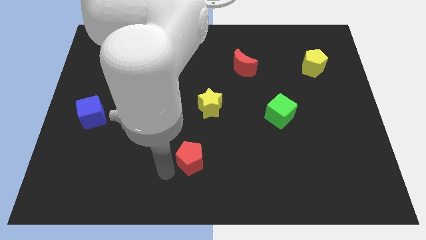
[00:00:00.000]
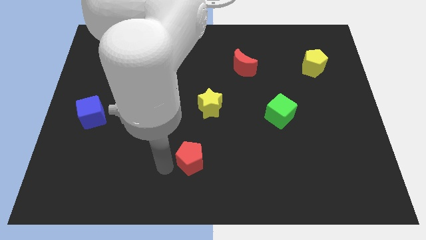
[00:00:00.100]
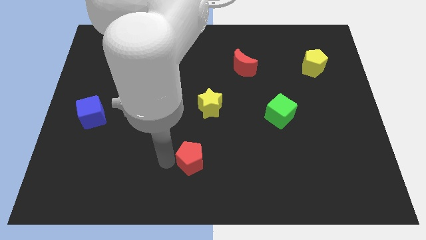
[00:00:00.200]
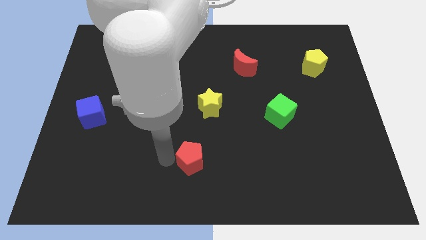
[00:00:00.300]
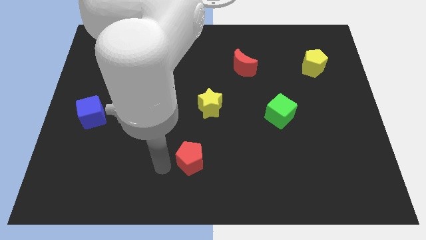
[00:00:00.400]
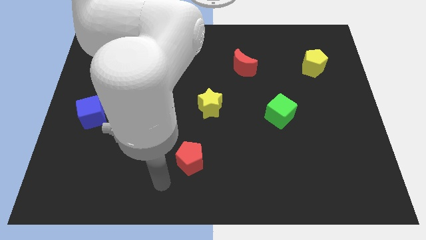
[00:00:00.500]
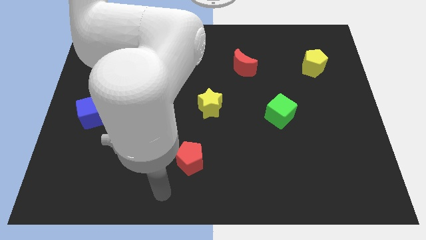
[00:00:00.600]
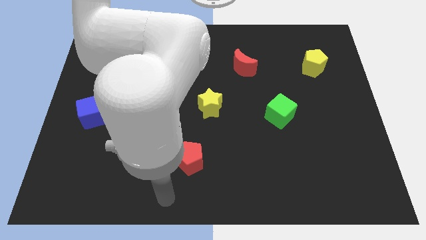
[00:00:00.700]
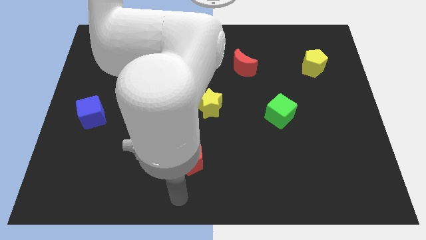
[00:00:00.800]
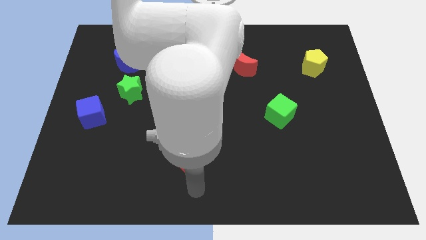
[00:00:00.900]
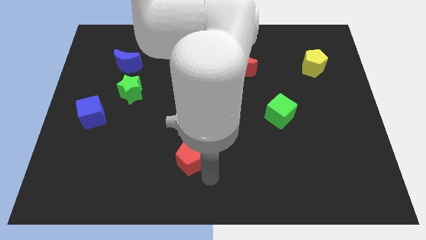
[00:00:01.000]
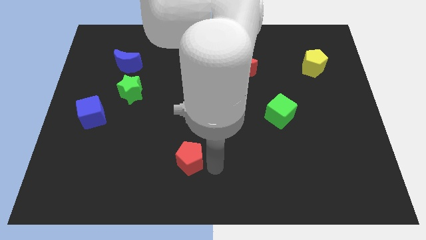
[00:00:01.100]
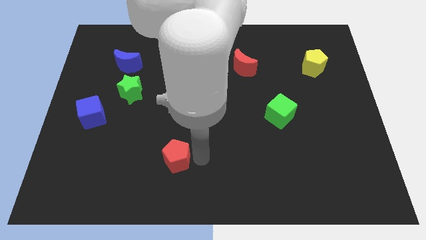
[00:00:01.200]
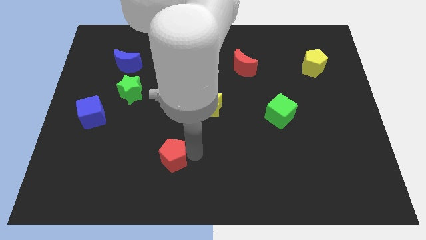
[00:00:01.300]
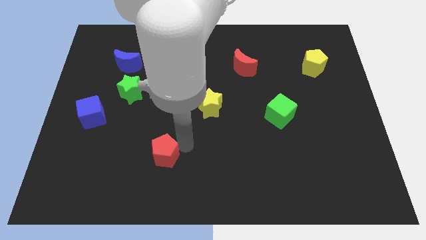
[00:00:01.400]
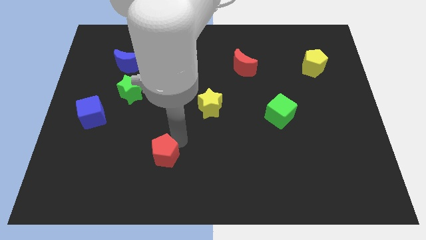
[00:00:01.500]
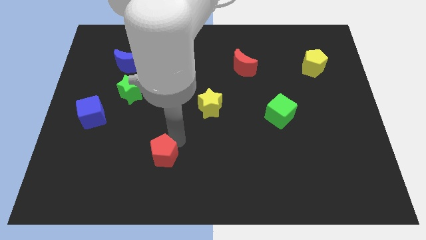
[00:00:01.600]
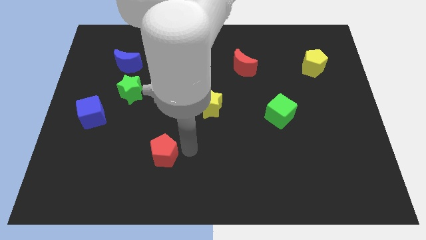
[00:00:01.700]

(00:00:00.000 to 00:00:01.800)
move the red pentagon towards blue cube

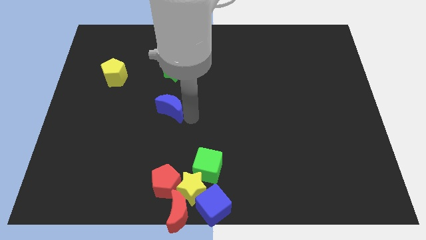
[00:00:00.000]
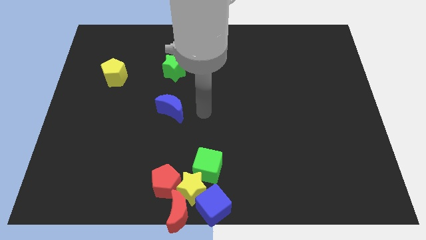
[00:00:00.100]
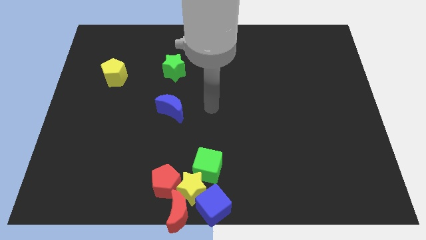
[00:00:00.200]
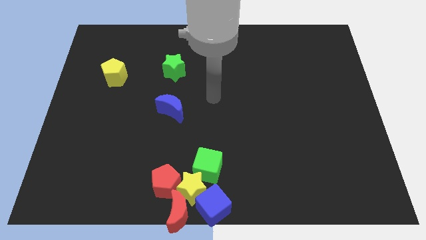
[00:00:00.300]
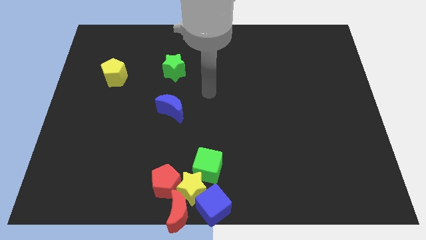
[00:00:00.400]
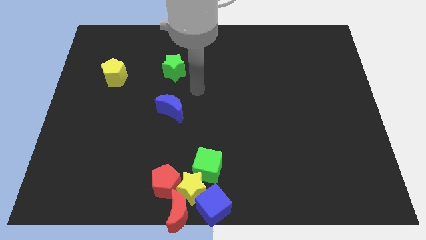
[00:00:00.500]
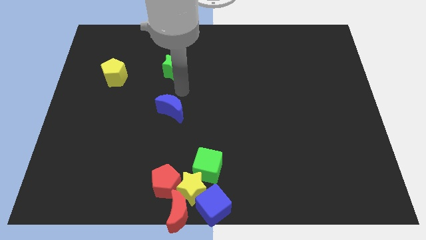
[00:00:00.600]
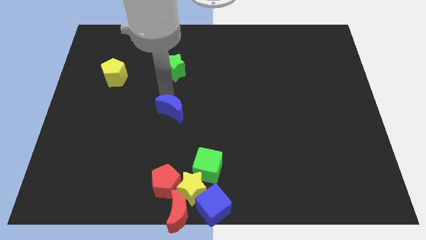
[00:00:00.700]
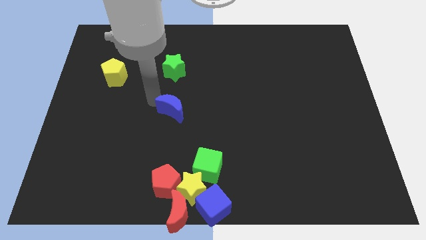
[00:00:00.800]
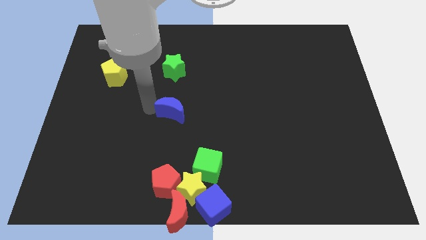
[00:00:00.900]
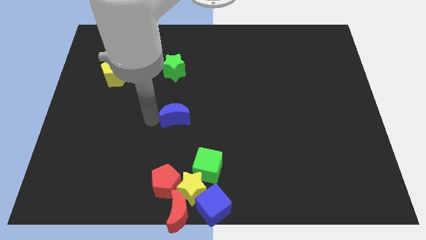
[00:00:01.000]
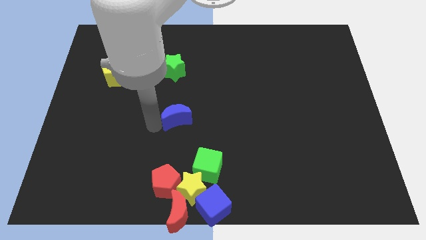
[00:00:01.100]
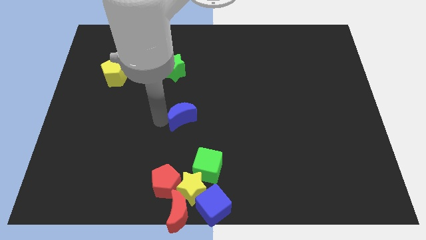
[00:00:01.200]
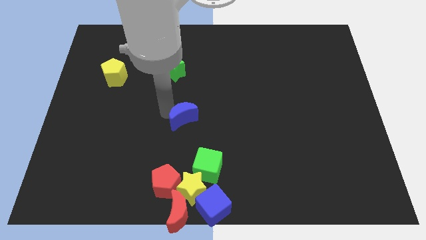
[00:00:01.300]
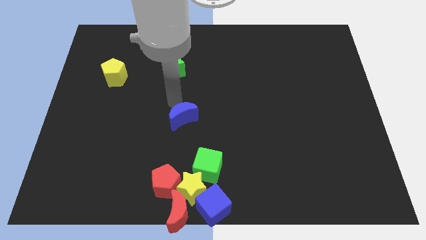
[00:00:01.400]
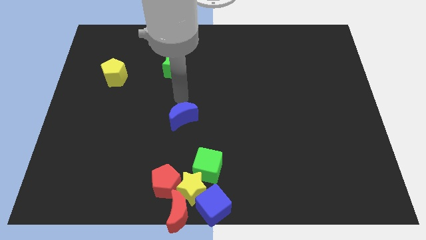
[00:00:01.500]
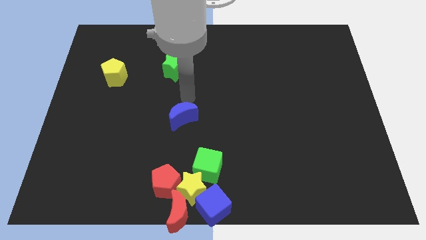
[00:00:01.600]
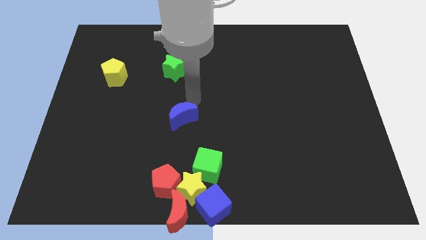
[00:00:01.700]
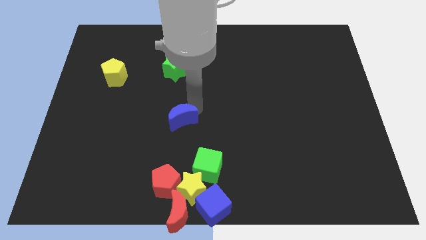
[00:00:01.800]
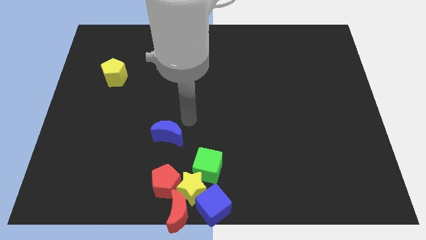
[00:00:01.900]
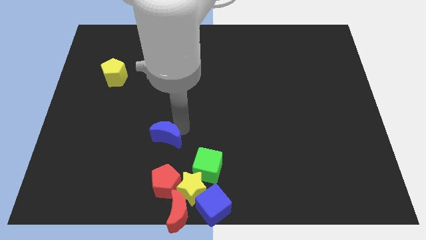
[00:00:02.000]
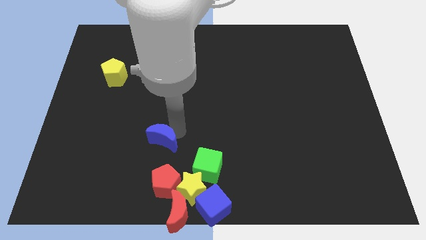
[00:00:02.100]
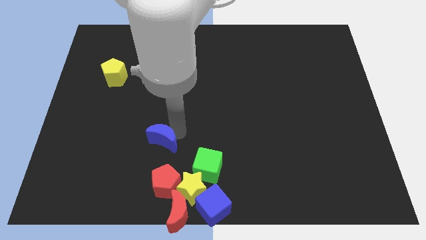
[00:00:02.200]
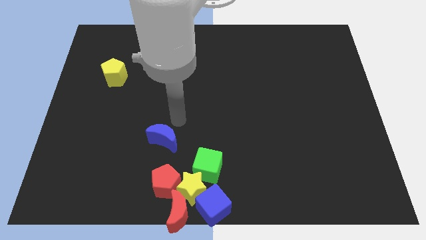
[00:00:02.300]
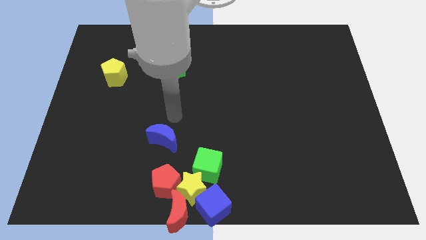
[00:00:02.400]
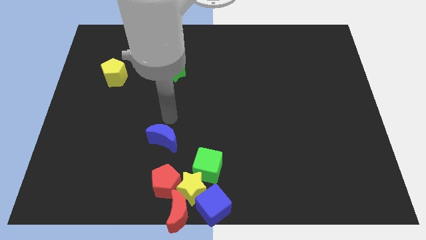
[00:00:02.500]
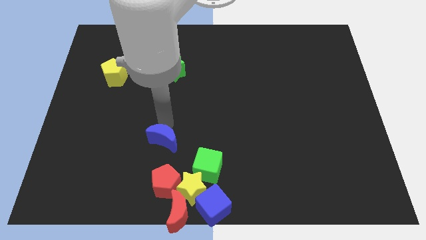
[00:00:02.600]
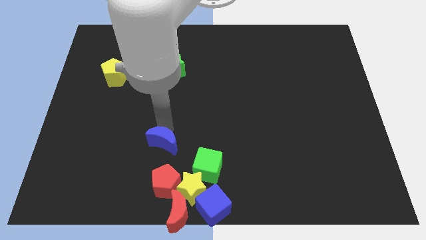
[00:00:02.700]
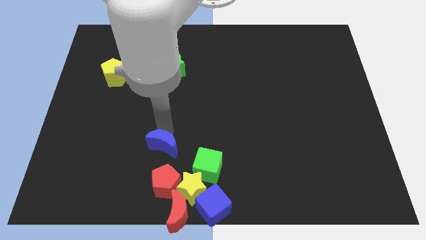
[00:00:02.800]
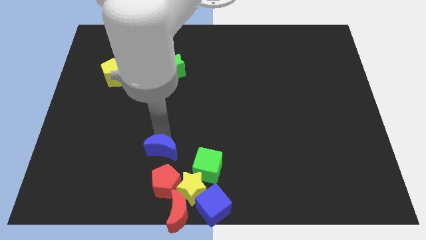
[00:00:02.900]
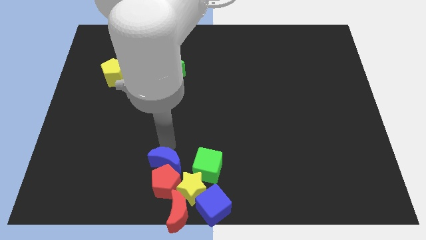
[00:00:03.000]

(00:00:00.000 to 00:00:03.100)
move the blue crescent to the top of the red pentagon

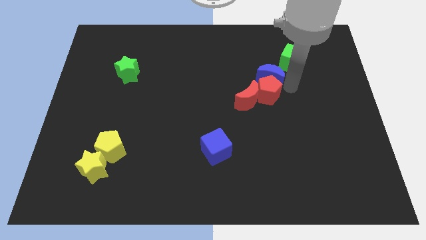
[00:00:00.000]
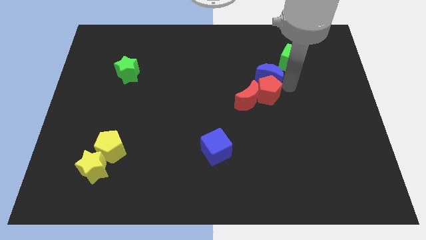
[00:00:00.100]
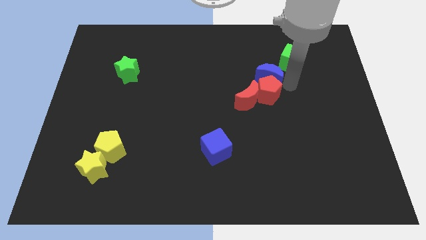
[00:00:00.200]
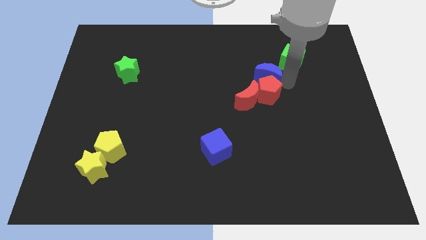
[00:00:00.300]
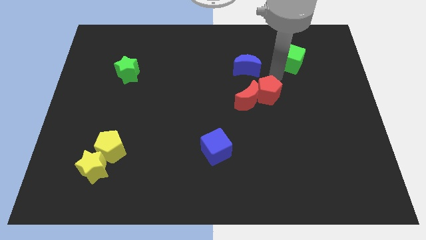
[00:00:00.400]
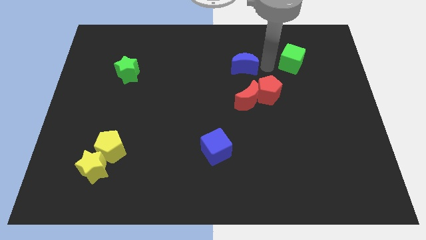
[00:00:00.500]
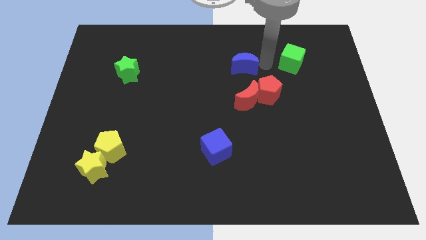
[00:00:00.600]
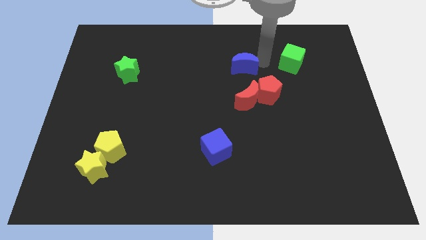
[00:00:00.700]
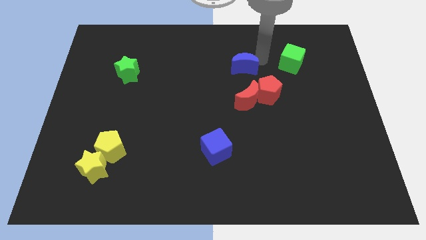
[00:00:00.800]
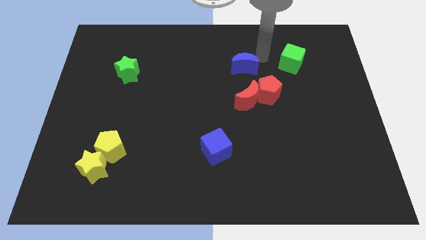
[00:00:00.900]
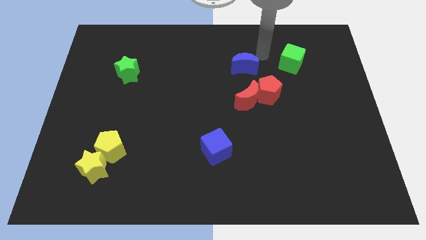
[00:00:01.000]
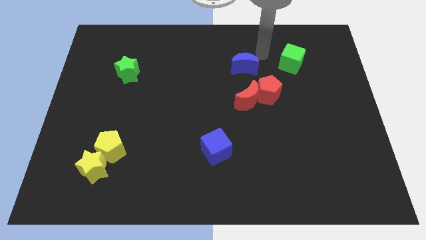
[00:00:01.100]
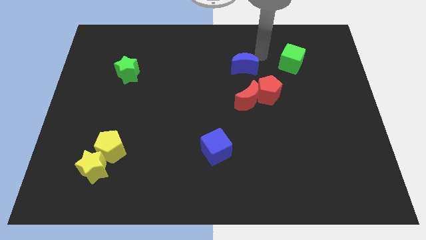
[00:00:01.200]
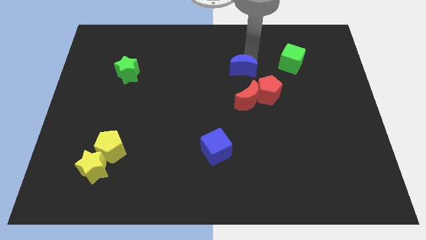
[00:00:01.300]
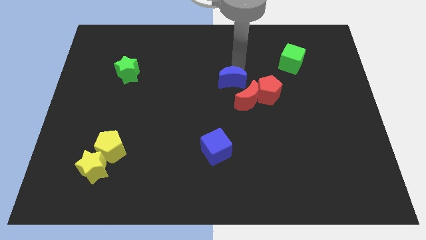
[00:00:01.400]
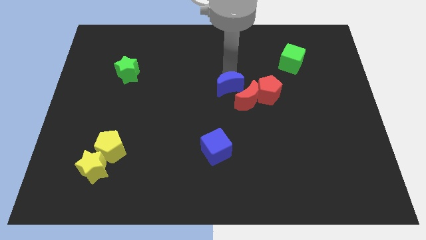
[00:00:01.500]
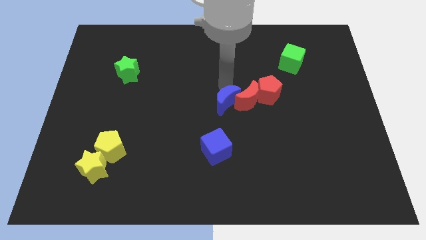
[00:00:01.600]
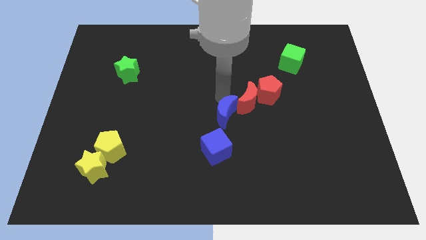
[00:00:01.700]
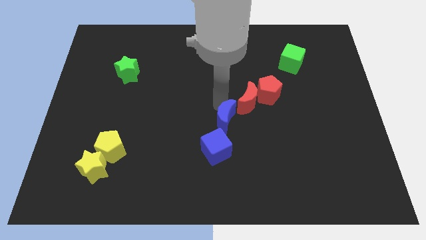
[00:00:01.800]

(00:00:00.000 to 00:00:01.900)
put the blue moon above the blue cube

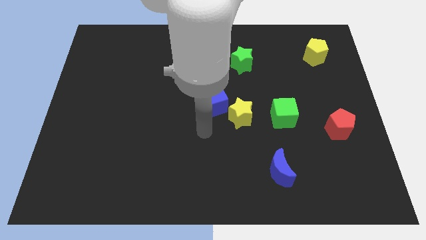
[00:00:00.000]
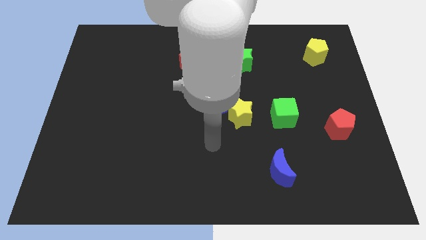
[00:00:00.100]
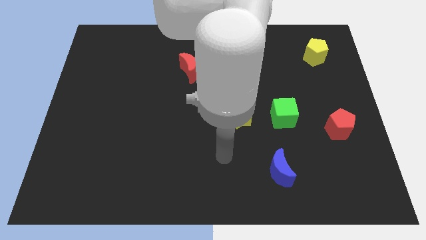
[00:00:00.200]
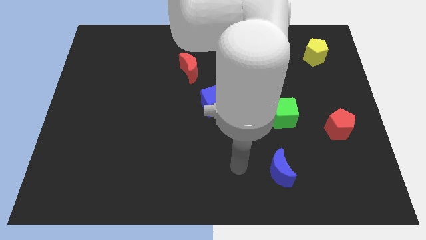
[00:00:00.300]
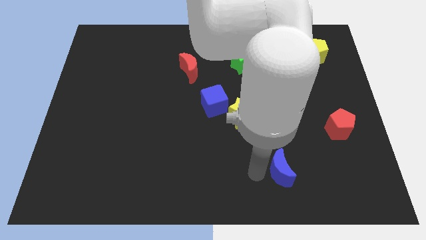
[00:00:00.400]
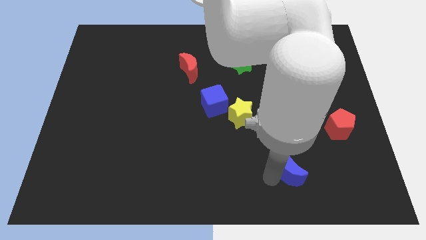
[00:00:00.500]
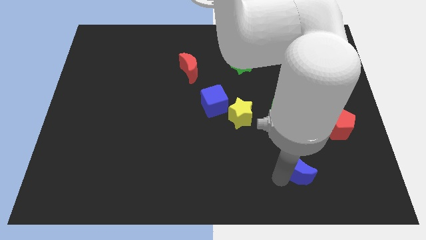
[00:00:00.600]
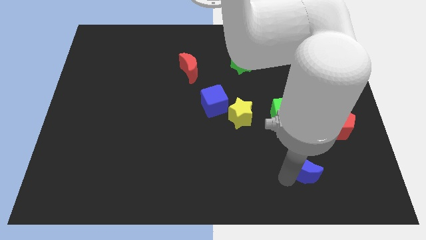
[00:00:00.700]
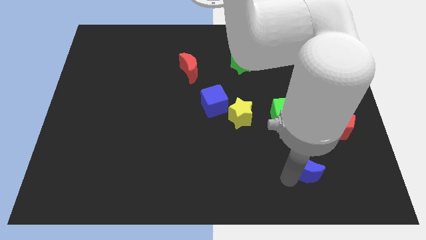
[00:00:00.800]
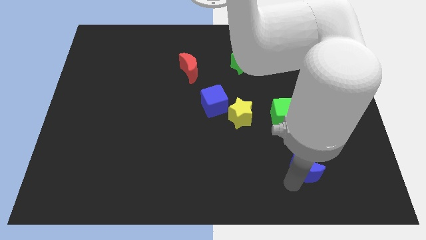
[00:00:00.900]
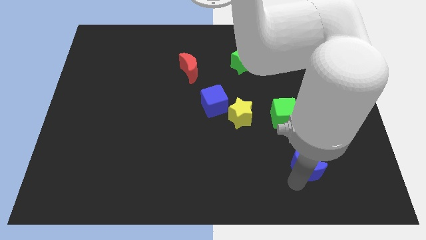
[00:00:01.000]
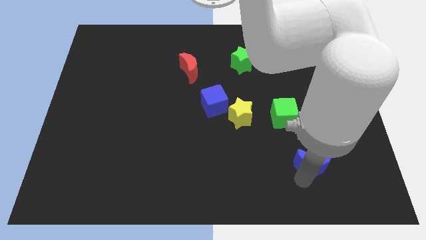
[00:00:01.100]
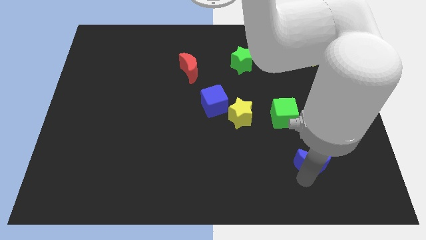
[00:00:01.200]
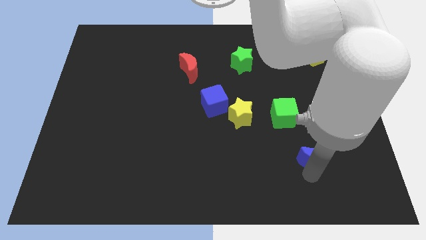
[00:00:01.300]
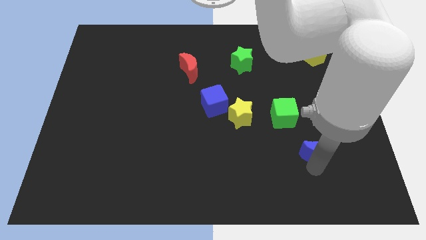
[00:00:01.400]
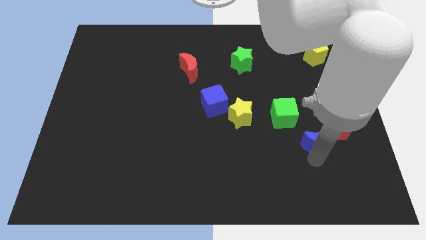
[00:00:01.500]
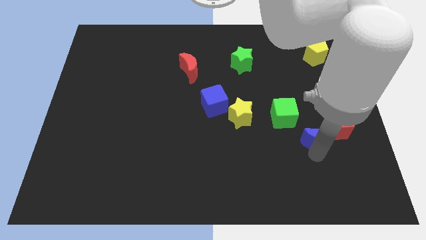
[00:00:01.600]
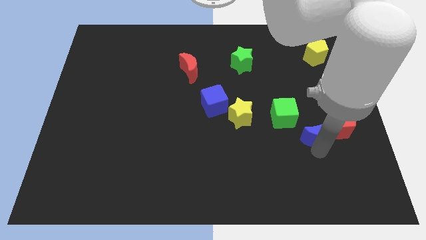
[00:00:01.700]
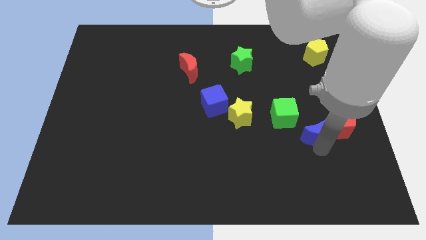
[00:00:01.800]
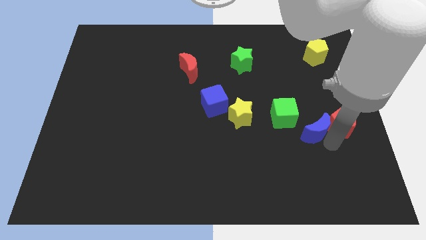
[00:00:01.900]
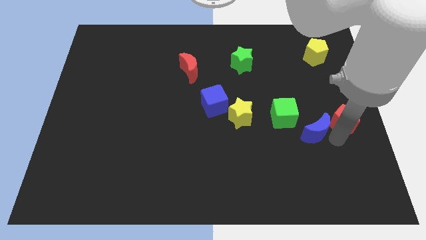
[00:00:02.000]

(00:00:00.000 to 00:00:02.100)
push the blue crescent to the left of the red pentagon

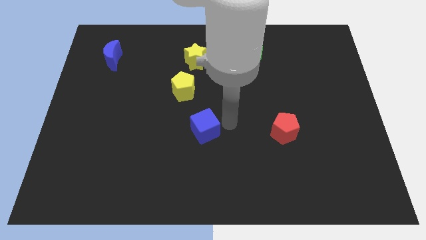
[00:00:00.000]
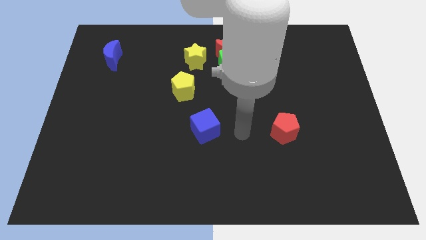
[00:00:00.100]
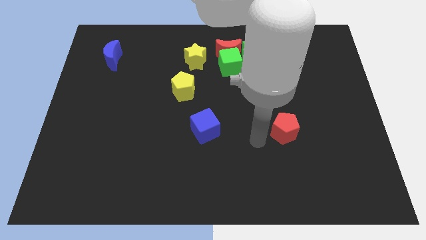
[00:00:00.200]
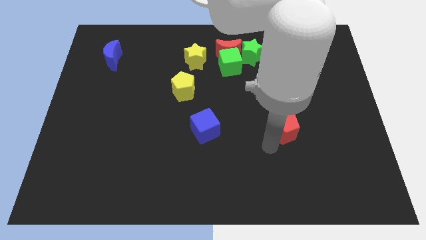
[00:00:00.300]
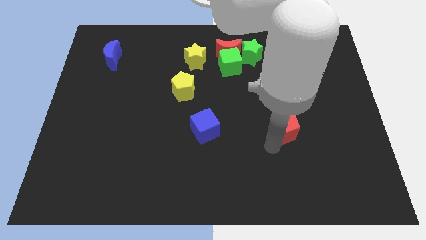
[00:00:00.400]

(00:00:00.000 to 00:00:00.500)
place your arm to the bottom left side of red pentagon
